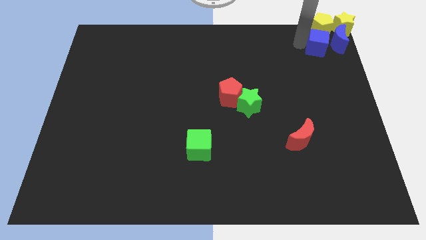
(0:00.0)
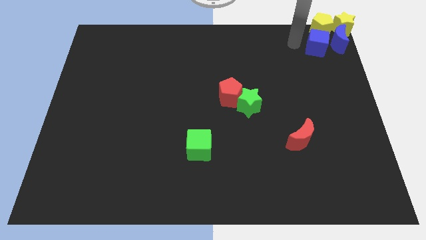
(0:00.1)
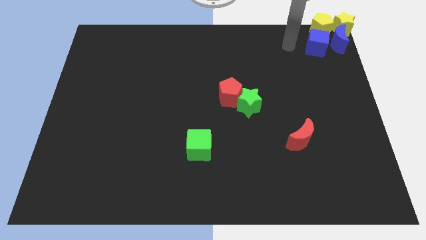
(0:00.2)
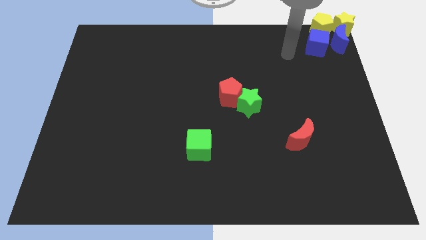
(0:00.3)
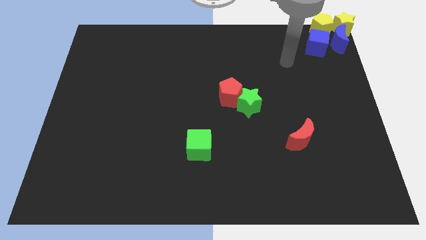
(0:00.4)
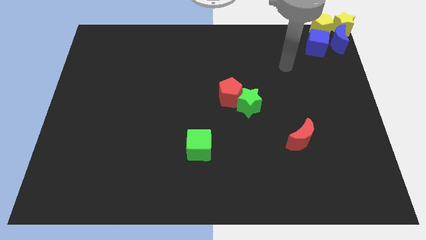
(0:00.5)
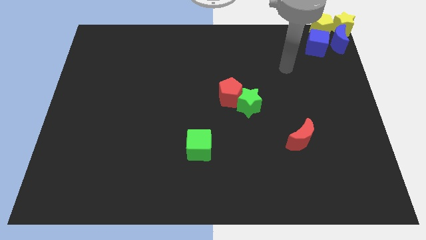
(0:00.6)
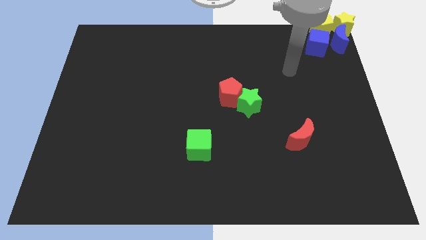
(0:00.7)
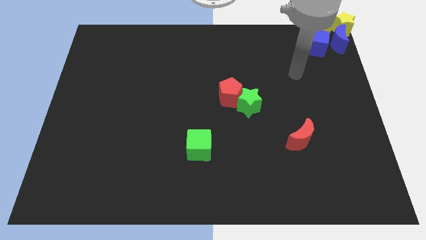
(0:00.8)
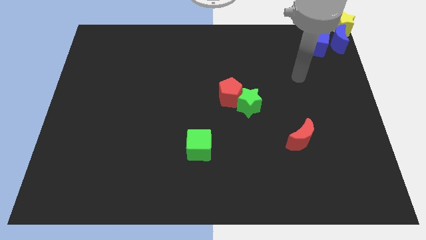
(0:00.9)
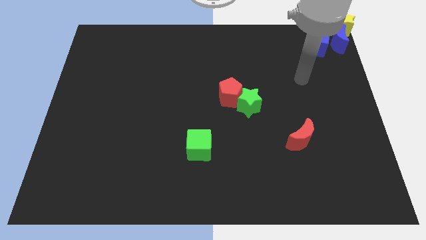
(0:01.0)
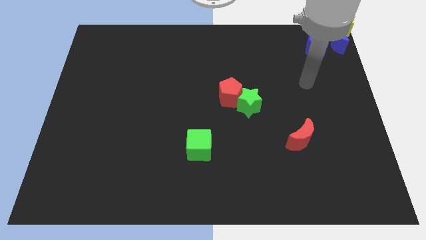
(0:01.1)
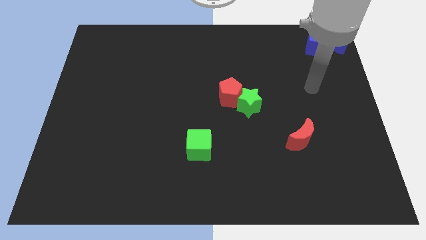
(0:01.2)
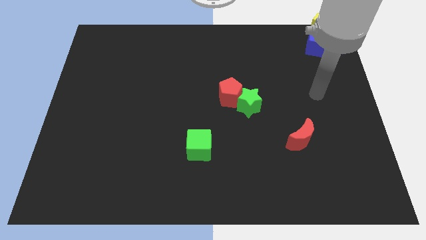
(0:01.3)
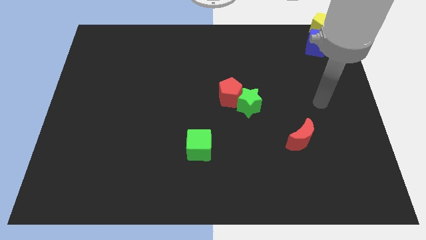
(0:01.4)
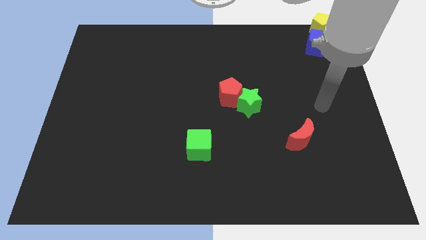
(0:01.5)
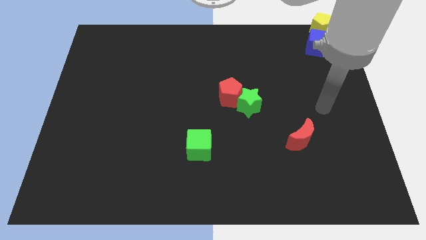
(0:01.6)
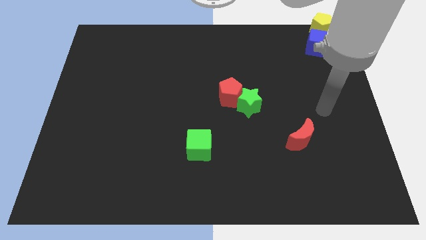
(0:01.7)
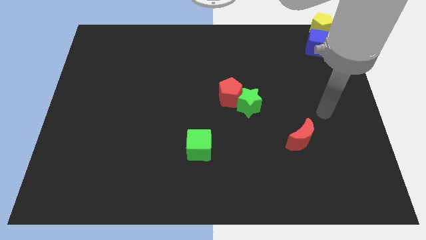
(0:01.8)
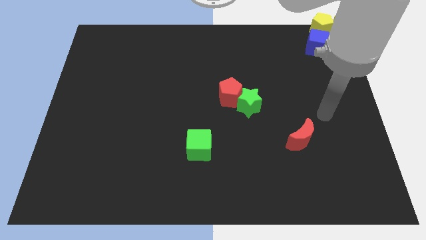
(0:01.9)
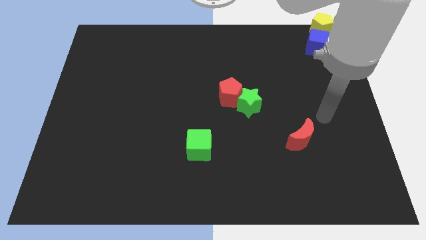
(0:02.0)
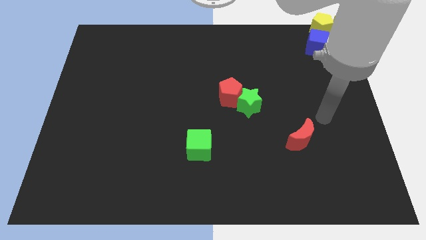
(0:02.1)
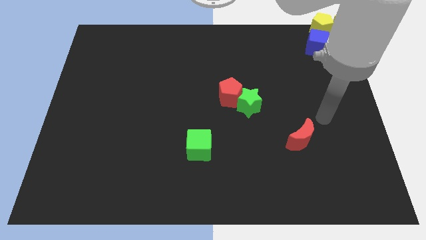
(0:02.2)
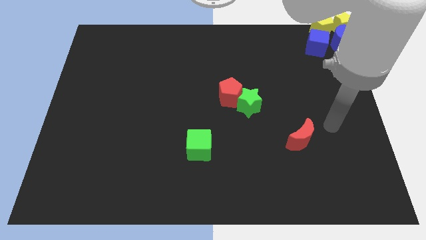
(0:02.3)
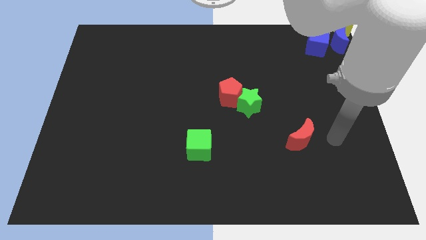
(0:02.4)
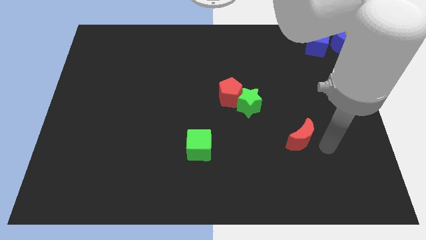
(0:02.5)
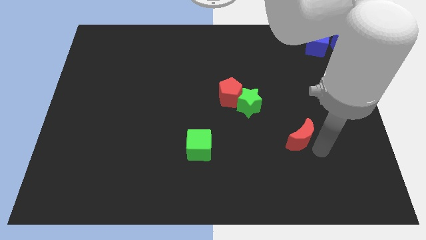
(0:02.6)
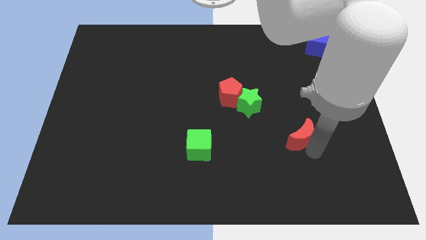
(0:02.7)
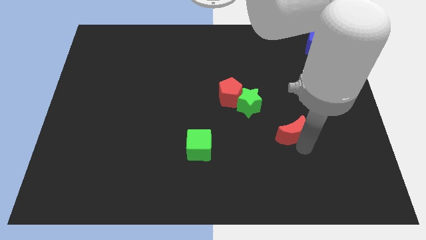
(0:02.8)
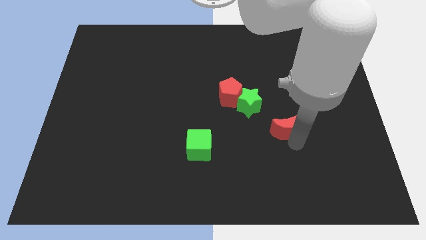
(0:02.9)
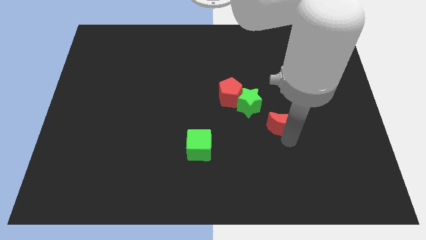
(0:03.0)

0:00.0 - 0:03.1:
move the red crescent towards the green star

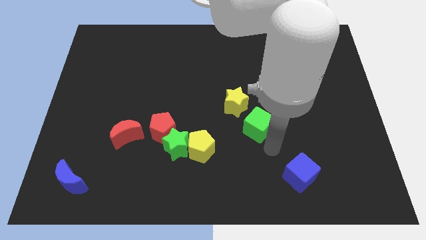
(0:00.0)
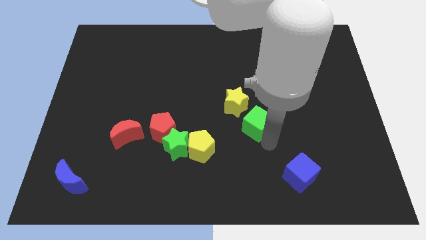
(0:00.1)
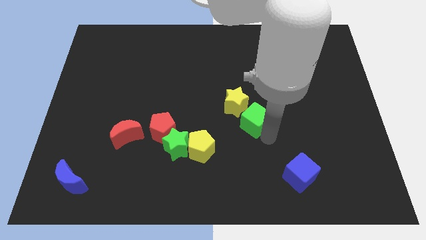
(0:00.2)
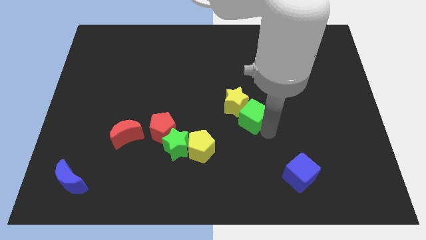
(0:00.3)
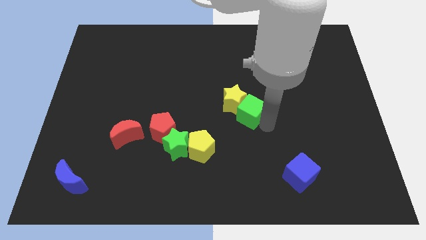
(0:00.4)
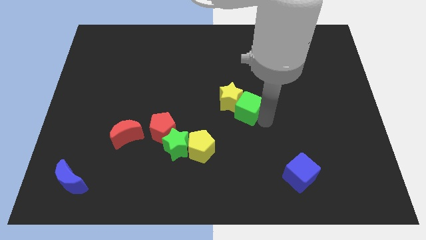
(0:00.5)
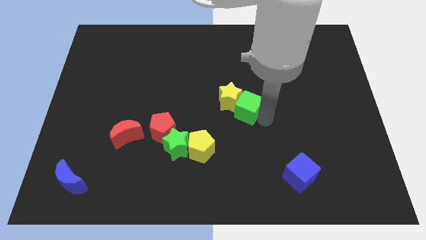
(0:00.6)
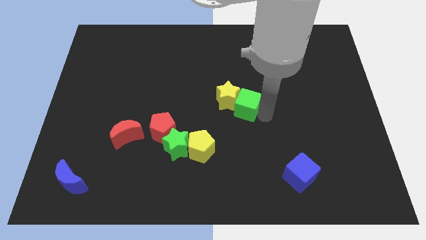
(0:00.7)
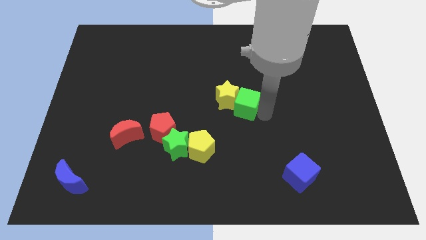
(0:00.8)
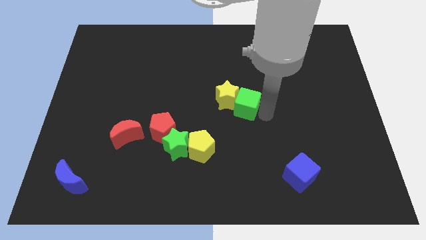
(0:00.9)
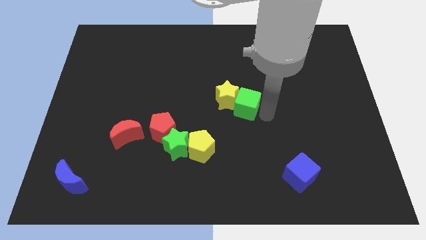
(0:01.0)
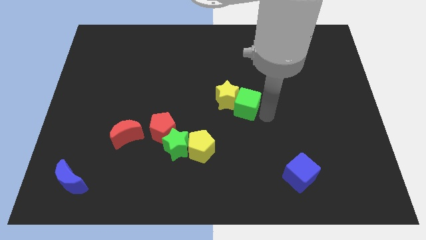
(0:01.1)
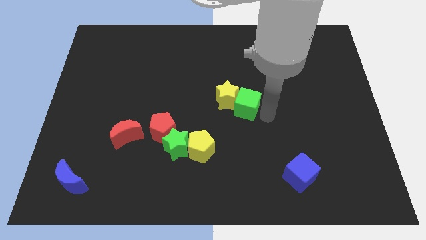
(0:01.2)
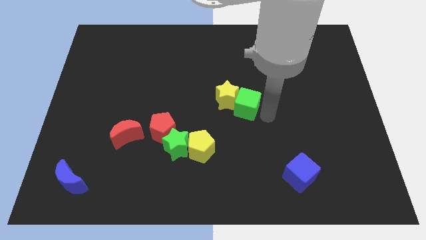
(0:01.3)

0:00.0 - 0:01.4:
push the green cube to the right of the yellow star

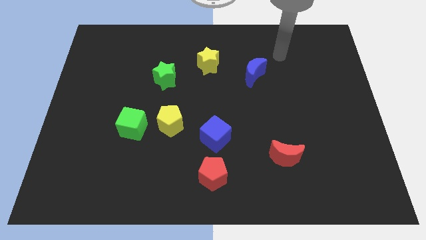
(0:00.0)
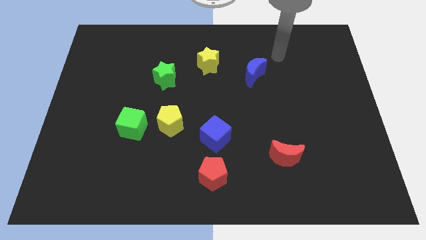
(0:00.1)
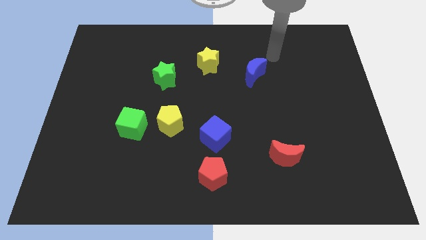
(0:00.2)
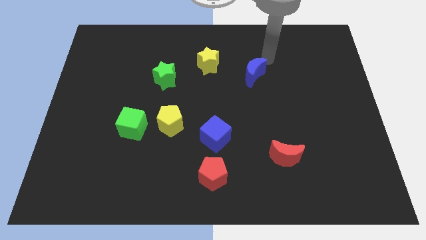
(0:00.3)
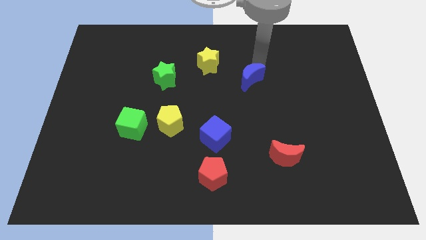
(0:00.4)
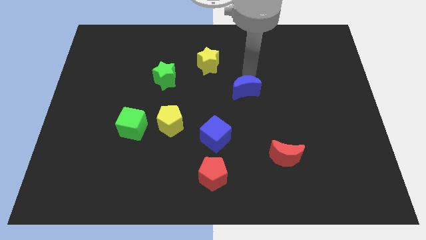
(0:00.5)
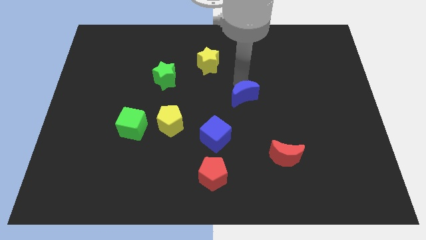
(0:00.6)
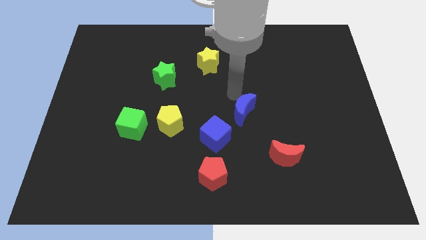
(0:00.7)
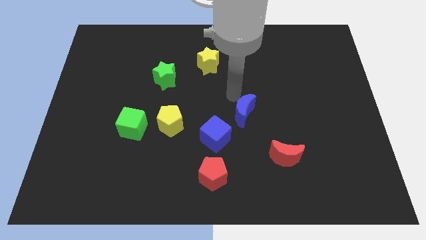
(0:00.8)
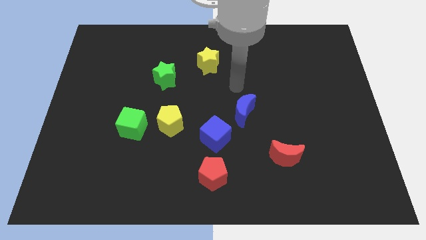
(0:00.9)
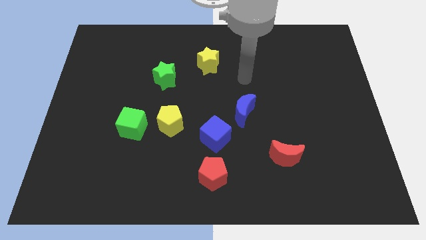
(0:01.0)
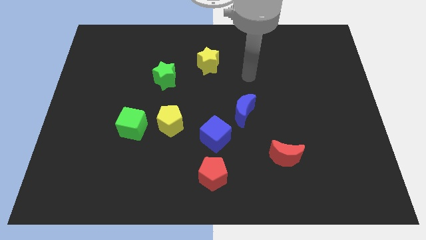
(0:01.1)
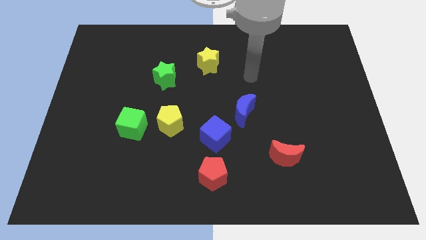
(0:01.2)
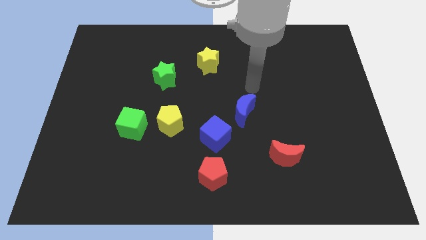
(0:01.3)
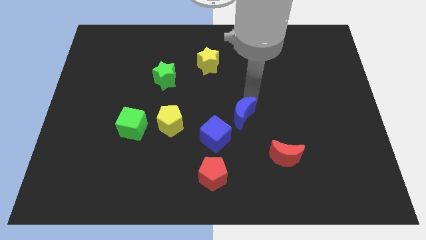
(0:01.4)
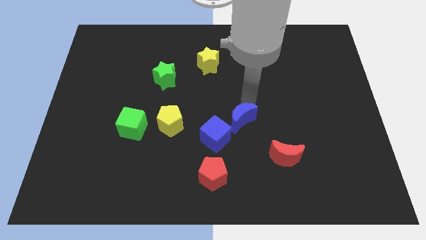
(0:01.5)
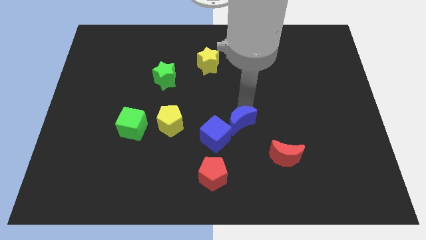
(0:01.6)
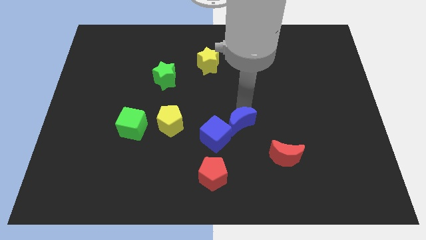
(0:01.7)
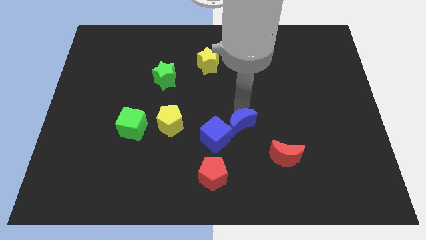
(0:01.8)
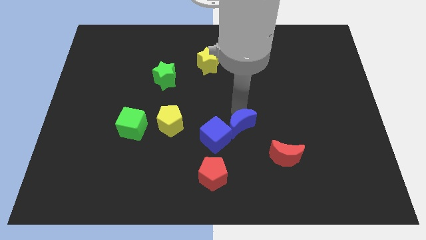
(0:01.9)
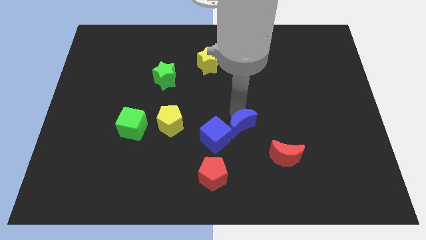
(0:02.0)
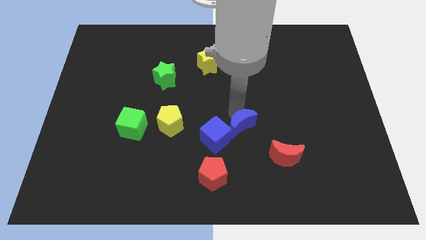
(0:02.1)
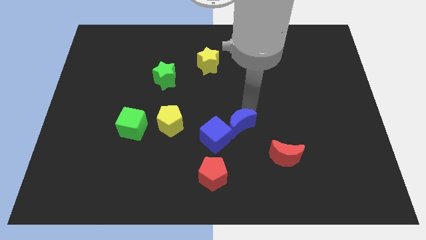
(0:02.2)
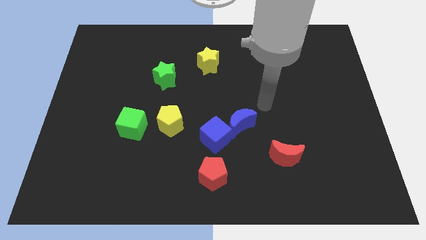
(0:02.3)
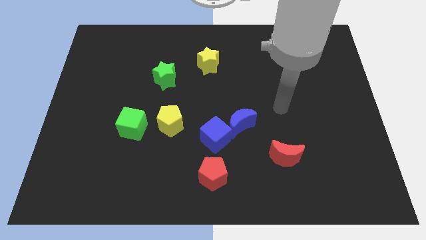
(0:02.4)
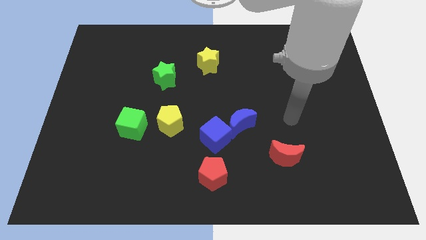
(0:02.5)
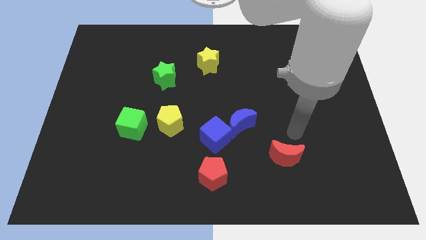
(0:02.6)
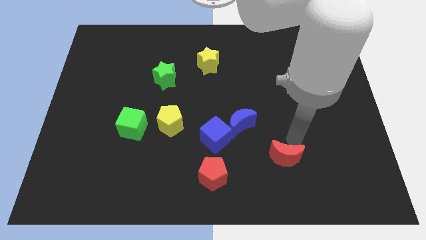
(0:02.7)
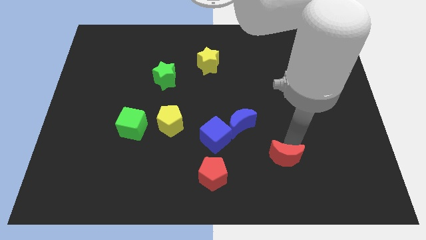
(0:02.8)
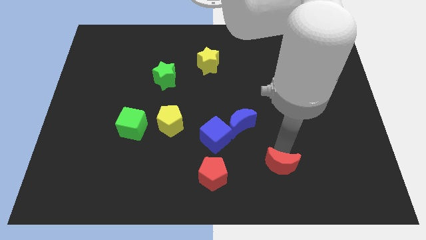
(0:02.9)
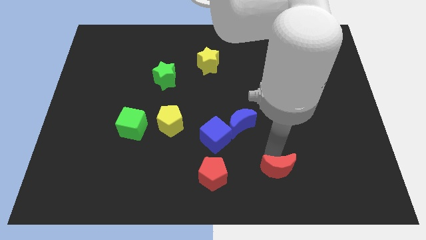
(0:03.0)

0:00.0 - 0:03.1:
attach the blue moon with the blue cube

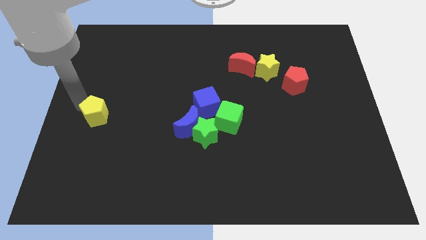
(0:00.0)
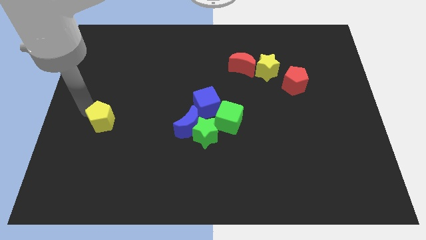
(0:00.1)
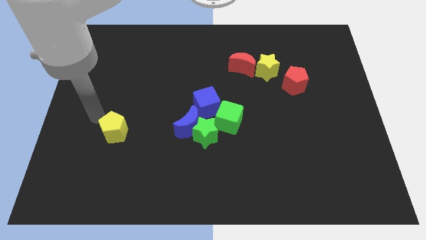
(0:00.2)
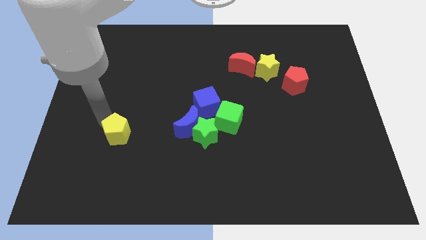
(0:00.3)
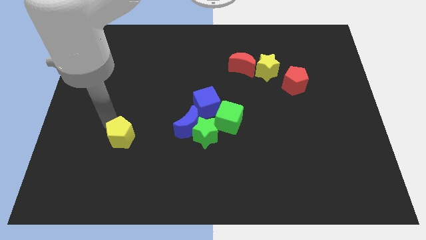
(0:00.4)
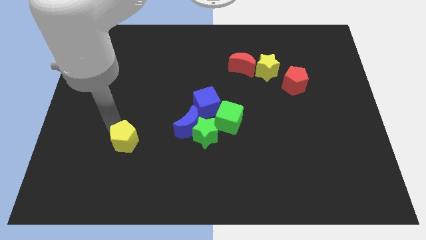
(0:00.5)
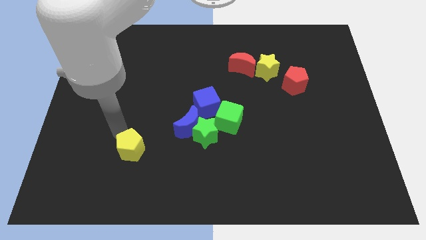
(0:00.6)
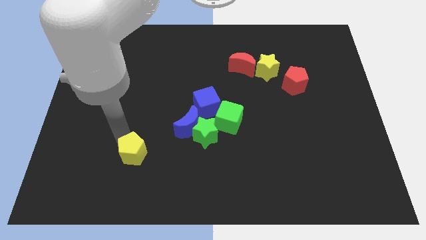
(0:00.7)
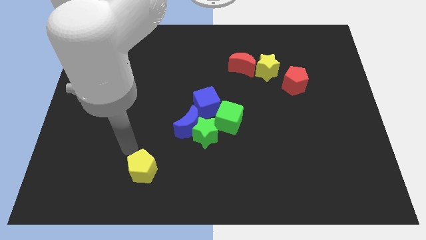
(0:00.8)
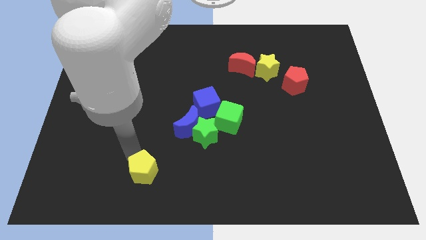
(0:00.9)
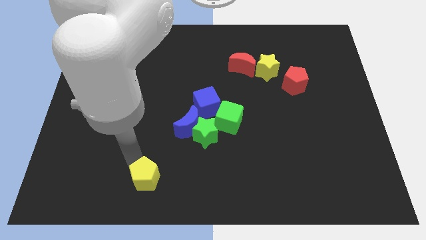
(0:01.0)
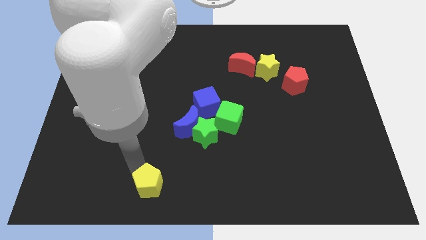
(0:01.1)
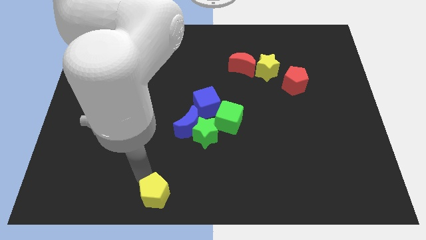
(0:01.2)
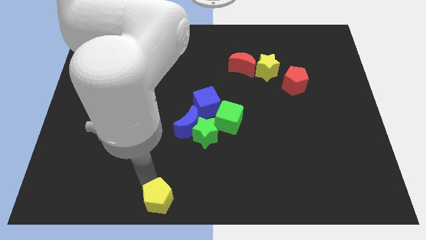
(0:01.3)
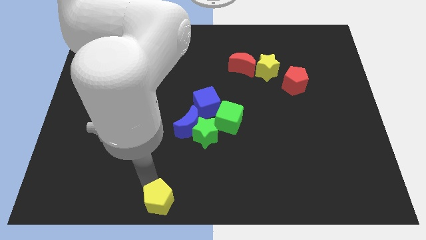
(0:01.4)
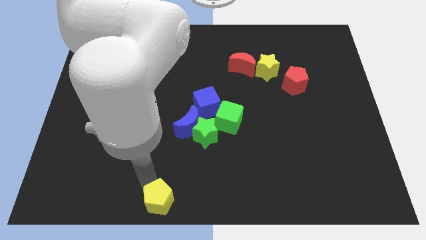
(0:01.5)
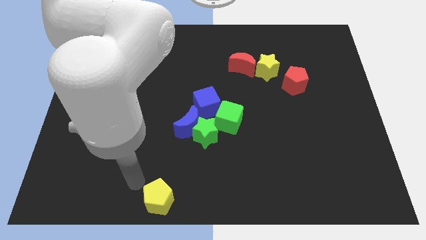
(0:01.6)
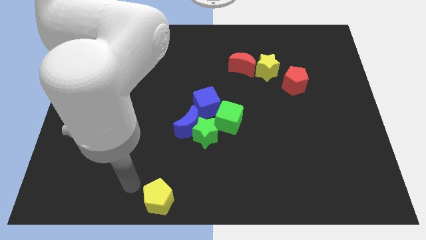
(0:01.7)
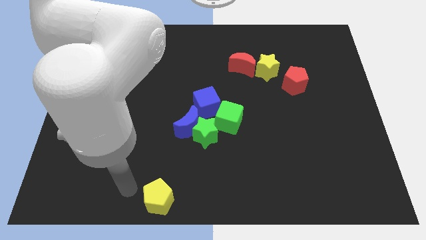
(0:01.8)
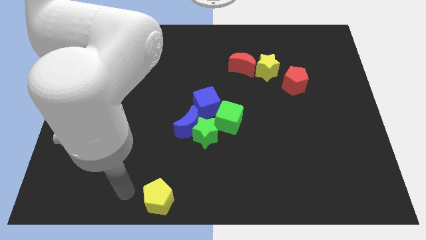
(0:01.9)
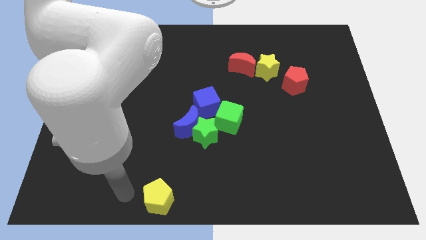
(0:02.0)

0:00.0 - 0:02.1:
push the yellow pentagon to the bottom center of the board
